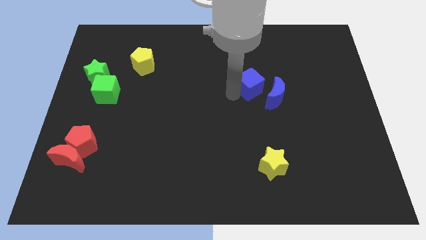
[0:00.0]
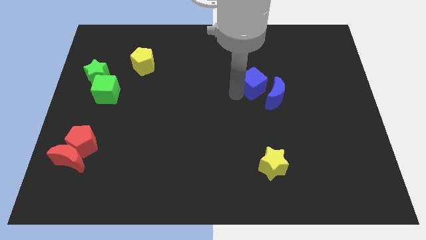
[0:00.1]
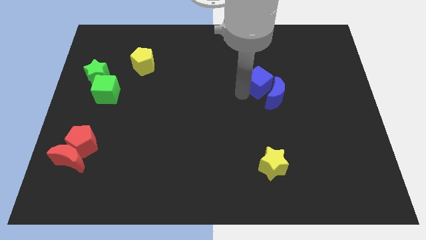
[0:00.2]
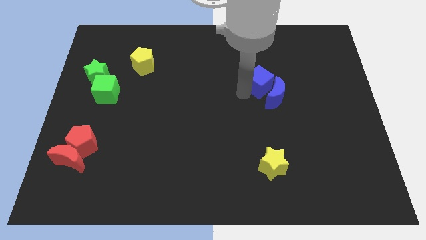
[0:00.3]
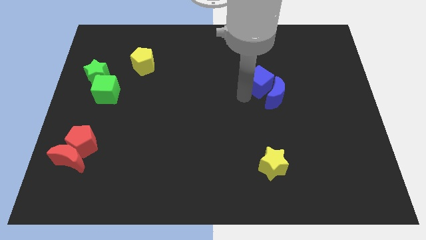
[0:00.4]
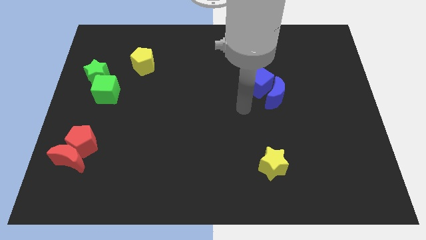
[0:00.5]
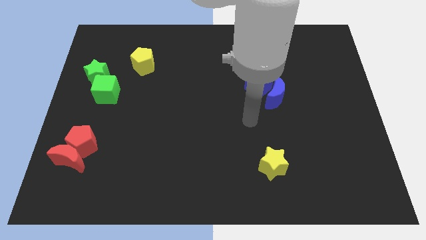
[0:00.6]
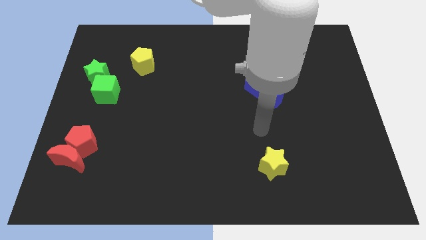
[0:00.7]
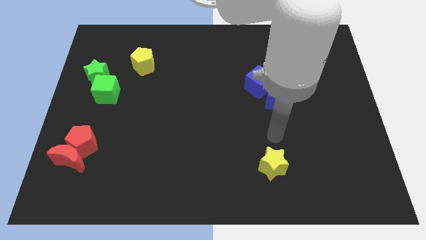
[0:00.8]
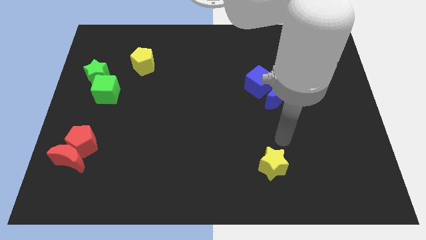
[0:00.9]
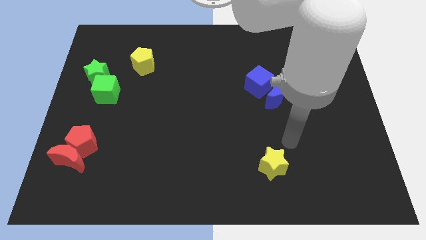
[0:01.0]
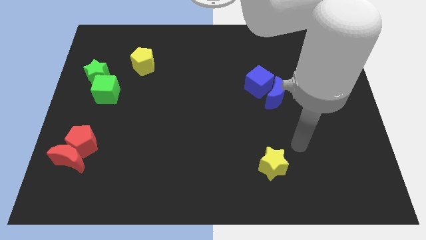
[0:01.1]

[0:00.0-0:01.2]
move the blue cube into the blue moon

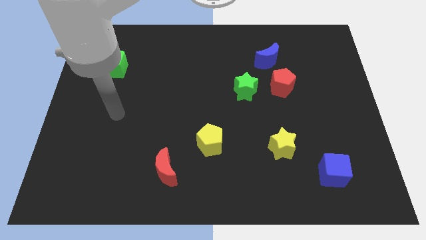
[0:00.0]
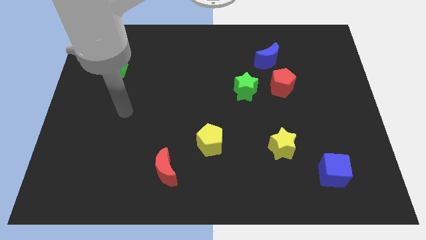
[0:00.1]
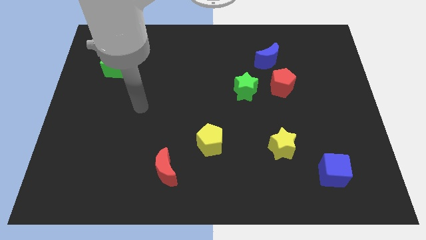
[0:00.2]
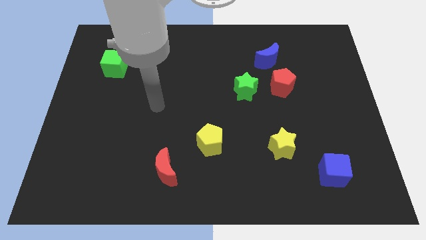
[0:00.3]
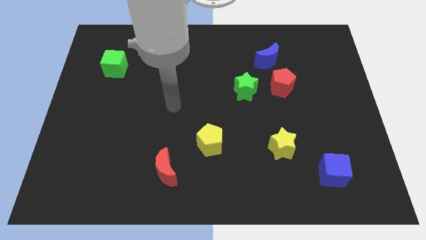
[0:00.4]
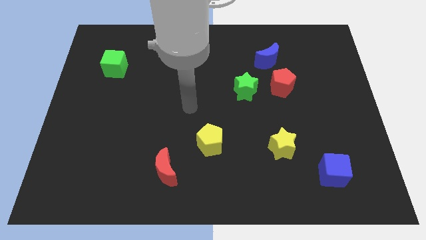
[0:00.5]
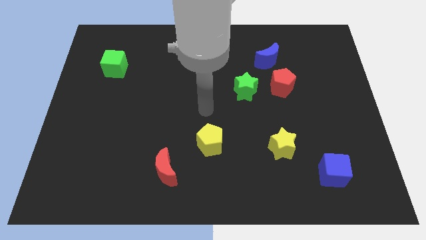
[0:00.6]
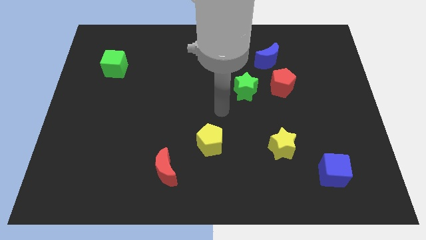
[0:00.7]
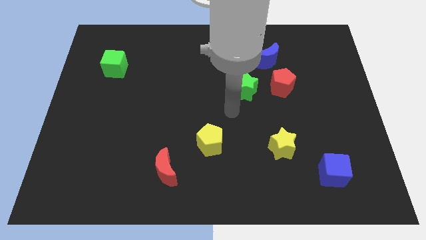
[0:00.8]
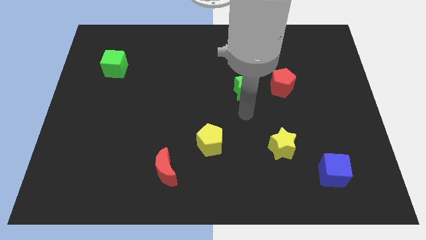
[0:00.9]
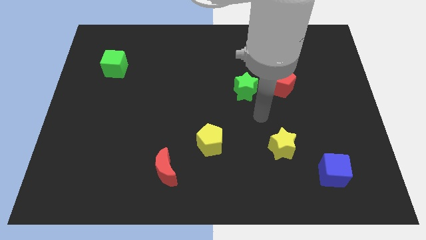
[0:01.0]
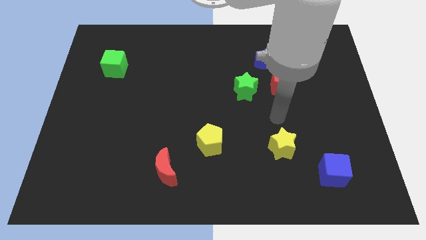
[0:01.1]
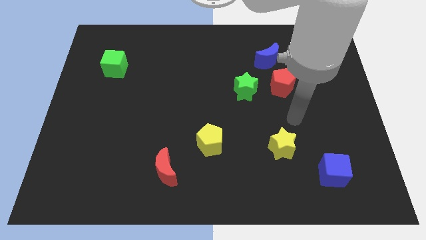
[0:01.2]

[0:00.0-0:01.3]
place the arm at the top of the yellow star

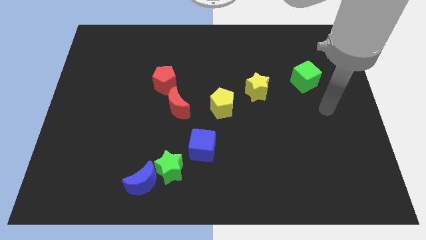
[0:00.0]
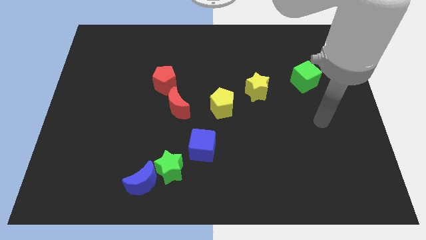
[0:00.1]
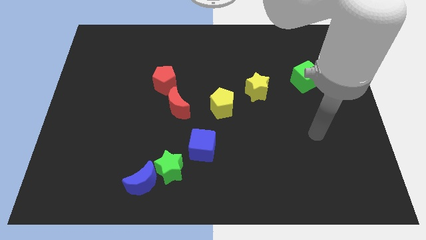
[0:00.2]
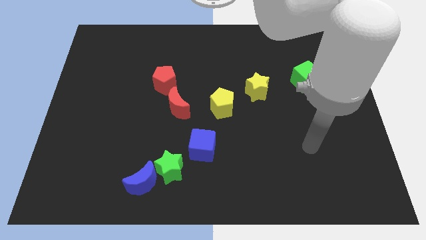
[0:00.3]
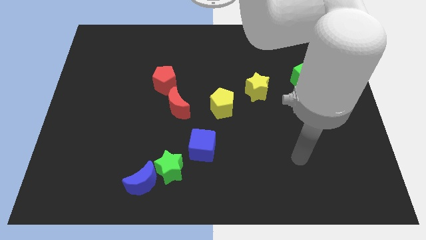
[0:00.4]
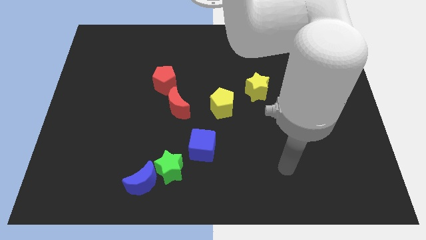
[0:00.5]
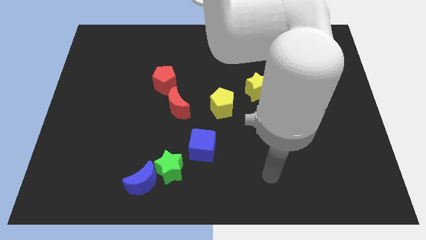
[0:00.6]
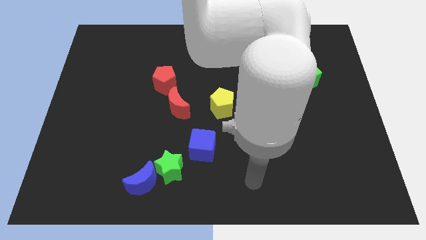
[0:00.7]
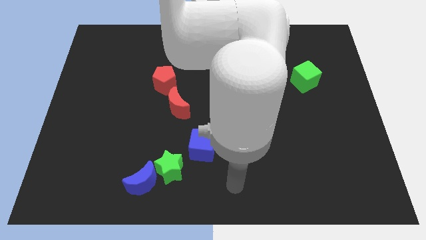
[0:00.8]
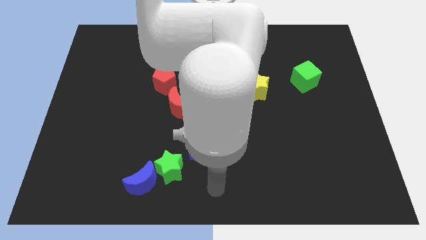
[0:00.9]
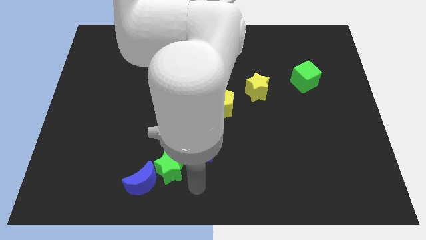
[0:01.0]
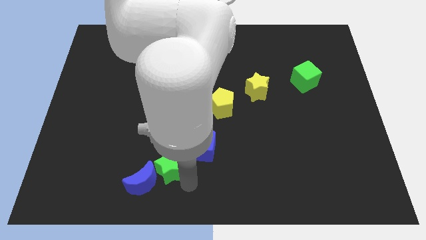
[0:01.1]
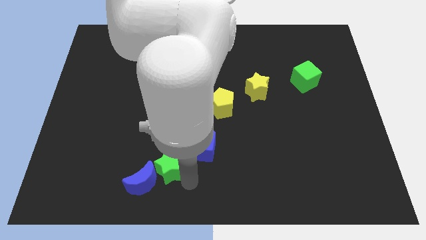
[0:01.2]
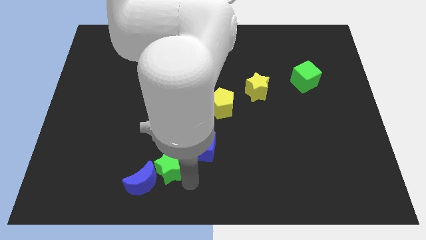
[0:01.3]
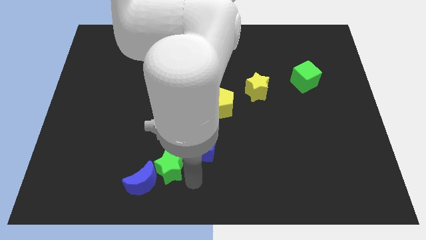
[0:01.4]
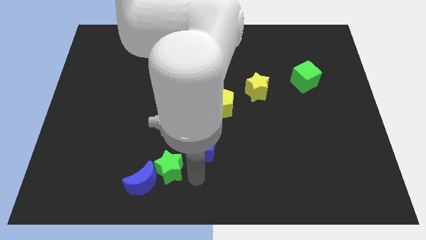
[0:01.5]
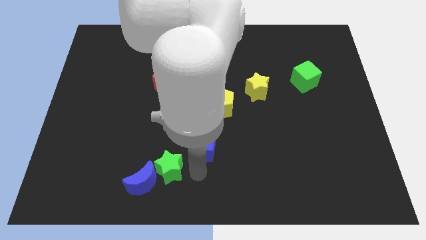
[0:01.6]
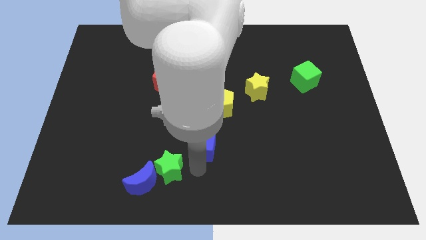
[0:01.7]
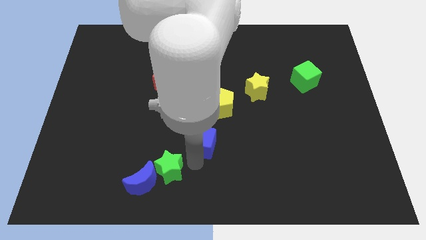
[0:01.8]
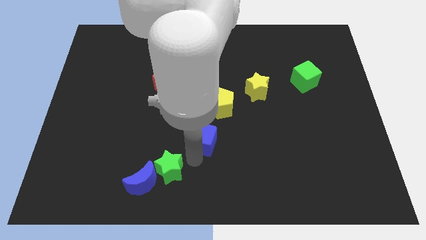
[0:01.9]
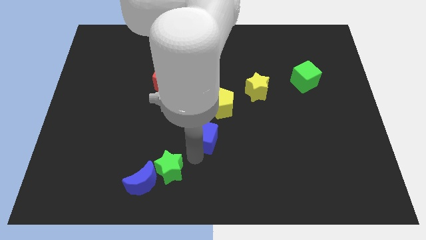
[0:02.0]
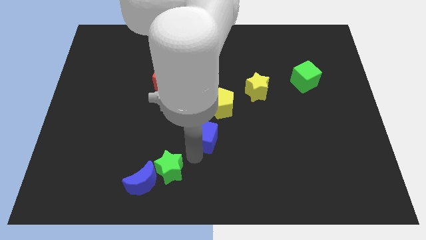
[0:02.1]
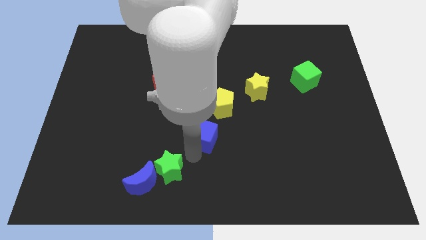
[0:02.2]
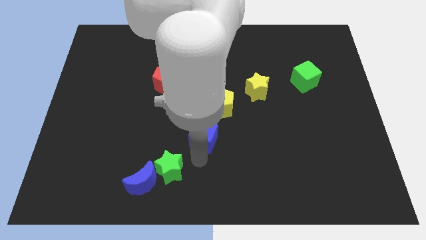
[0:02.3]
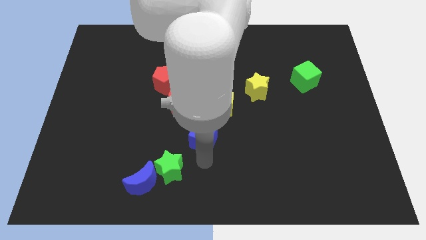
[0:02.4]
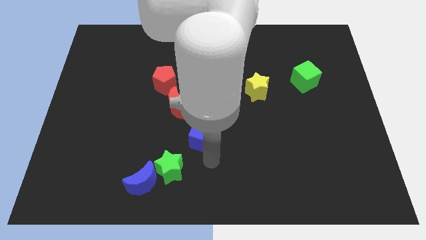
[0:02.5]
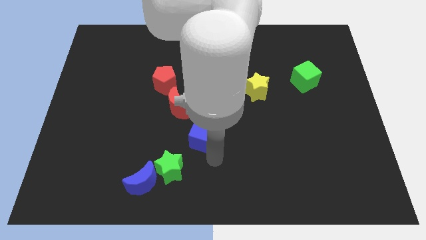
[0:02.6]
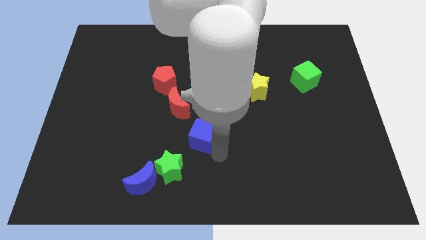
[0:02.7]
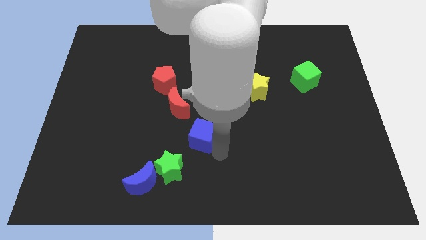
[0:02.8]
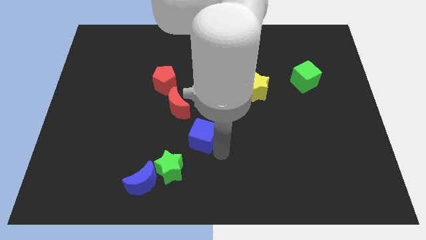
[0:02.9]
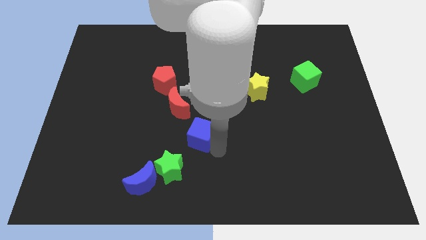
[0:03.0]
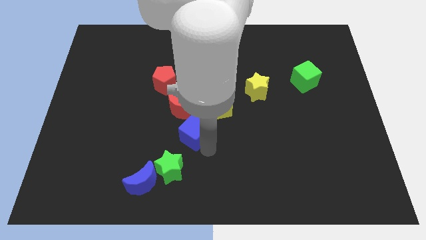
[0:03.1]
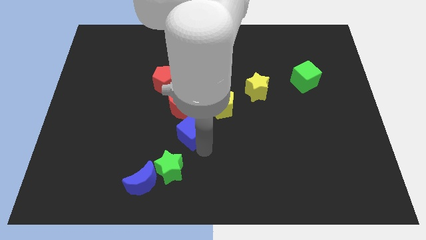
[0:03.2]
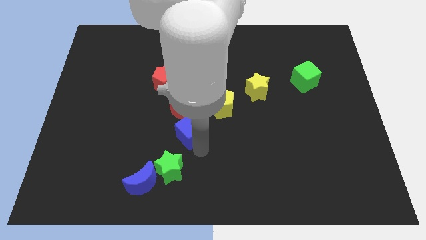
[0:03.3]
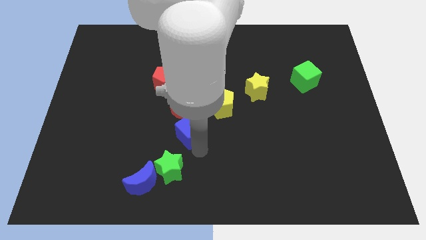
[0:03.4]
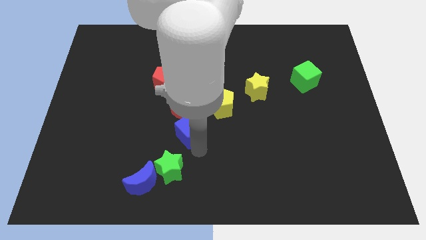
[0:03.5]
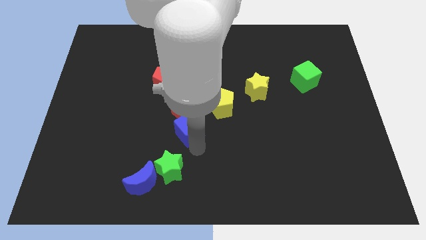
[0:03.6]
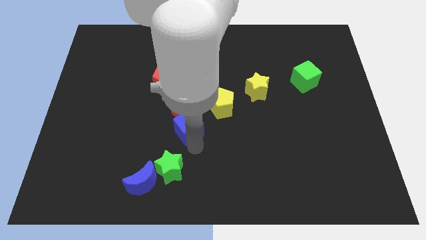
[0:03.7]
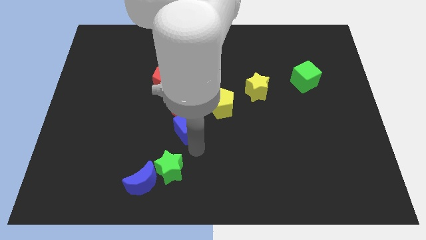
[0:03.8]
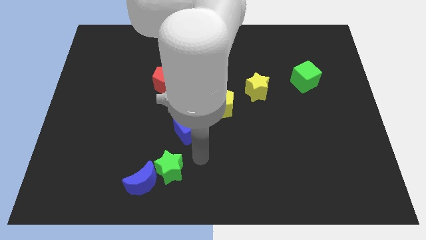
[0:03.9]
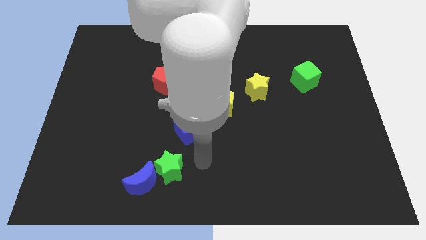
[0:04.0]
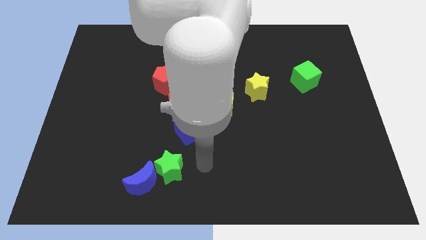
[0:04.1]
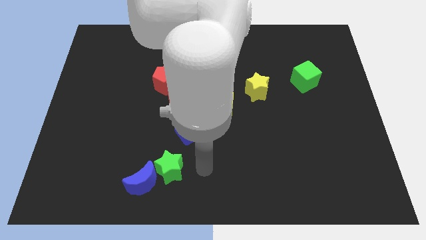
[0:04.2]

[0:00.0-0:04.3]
move the blue cube to the bottom of the red crescent

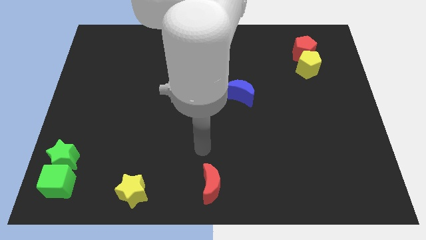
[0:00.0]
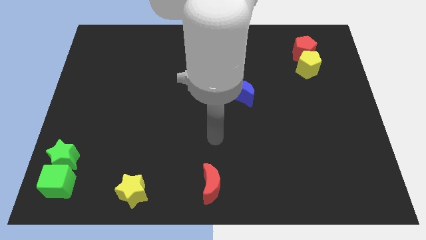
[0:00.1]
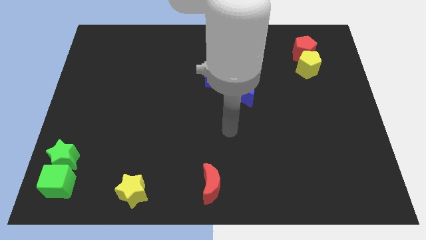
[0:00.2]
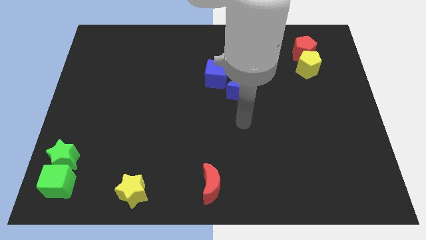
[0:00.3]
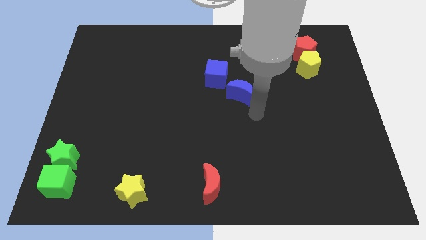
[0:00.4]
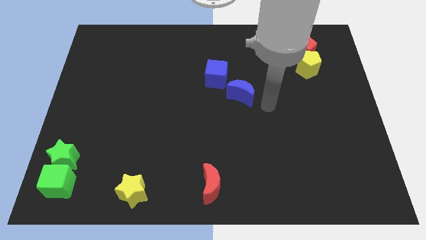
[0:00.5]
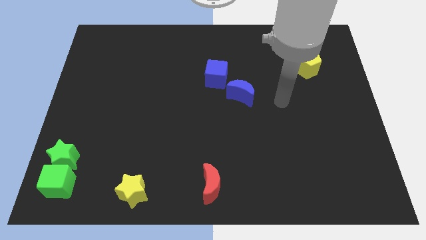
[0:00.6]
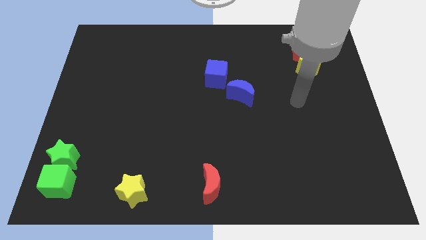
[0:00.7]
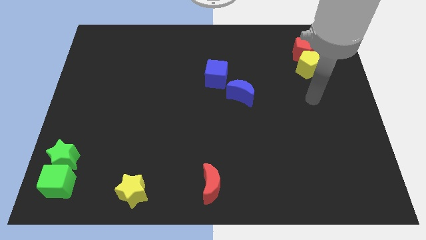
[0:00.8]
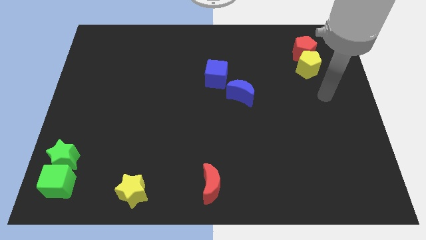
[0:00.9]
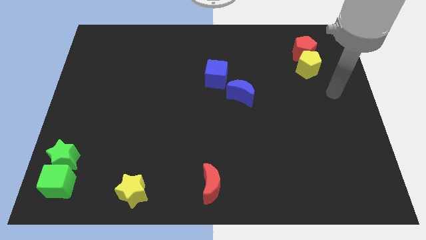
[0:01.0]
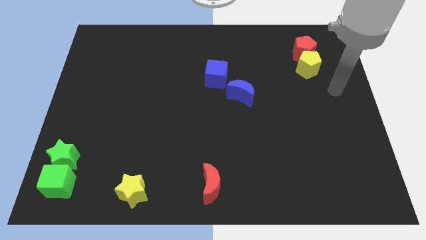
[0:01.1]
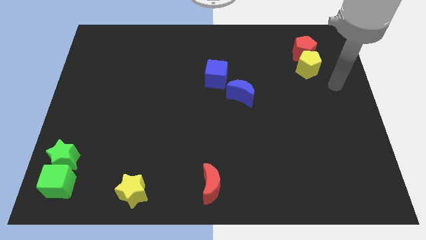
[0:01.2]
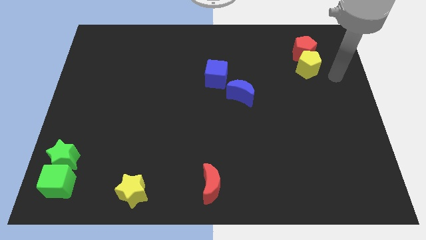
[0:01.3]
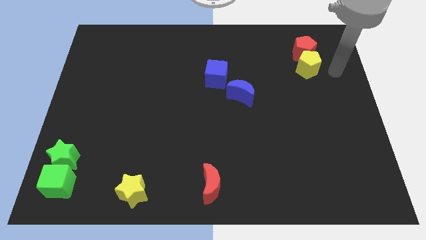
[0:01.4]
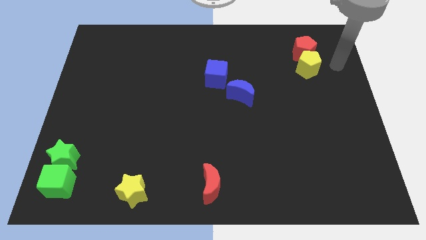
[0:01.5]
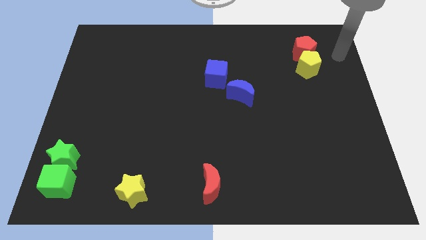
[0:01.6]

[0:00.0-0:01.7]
point your arm at the right of the yellow pentagon

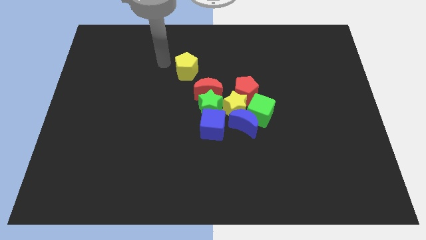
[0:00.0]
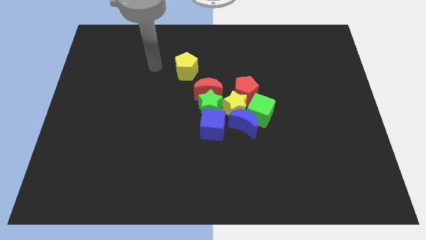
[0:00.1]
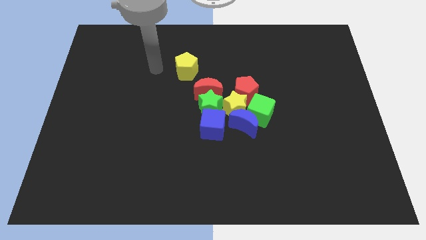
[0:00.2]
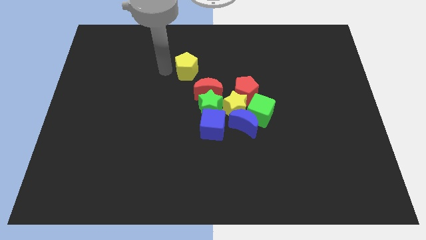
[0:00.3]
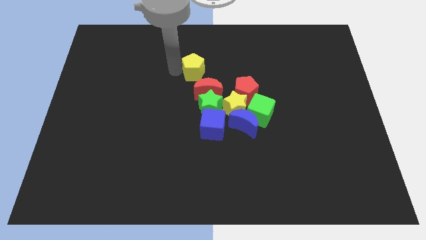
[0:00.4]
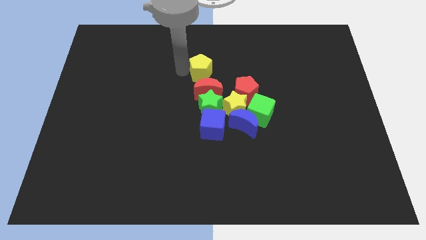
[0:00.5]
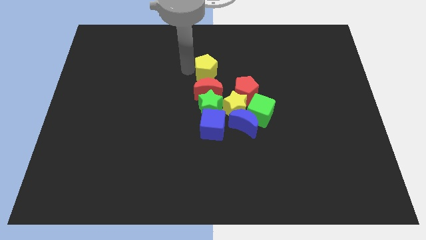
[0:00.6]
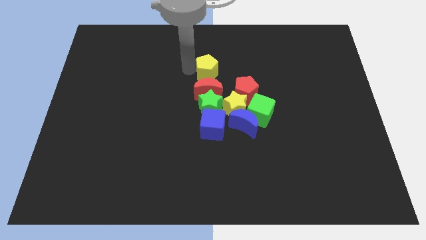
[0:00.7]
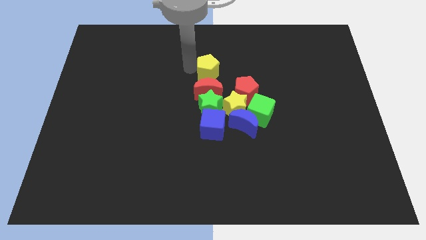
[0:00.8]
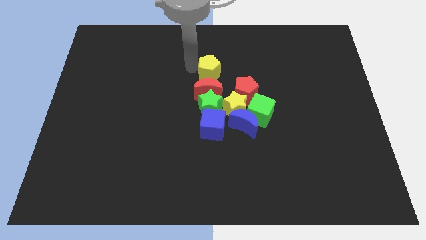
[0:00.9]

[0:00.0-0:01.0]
move the yellow pentagon on the top of the red moon
